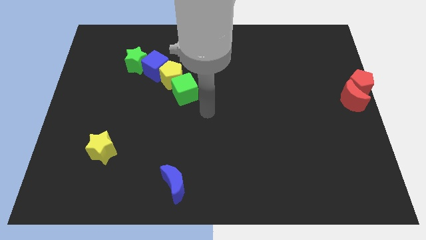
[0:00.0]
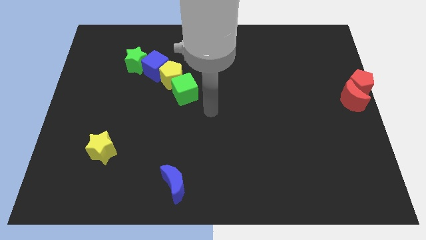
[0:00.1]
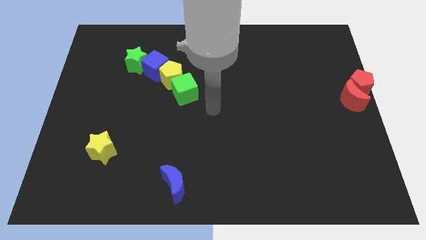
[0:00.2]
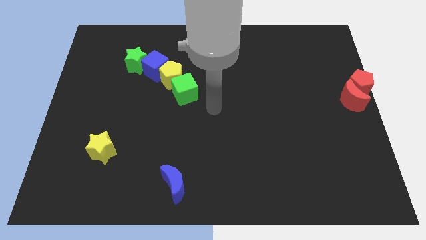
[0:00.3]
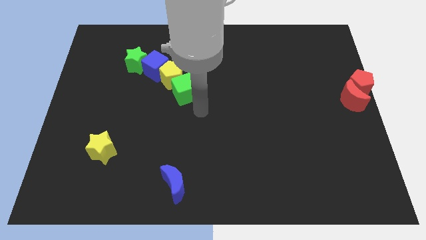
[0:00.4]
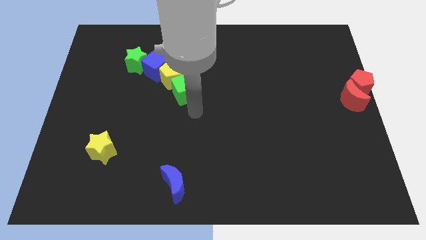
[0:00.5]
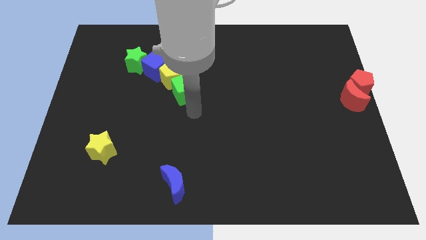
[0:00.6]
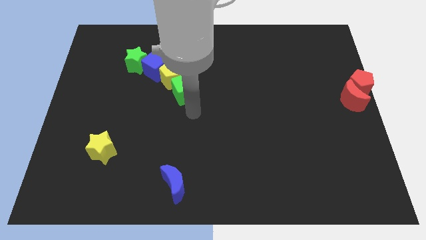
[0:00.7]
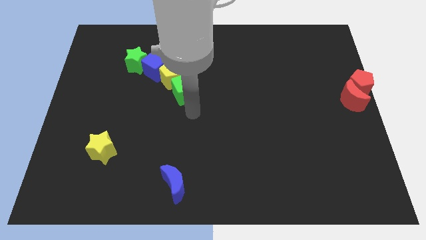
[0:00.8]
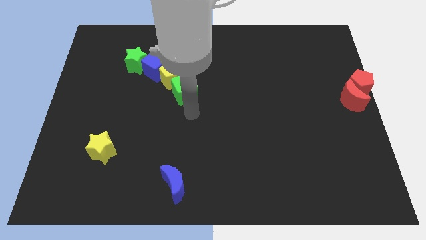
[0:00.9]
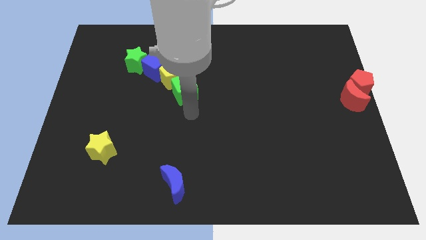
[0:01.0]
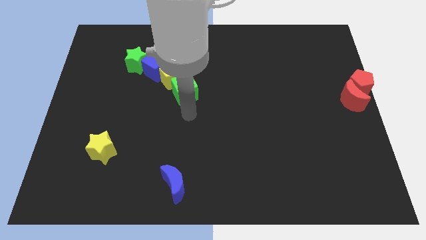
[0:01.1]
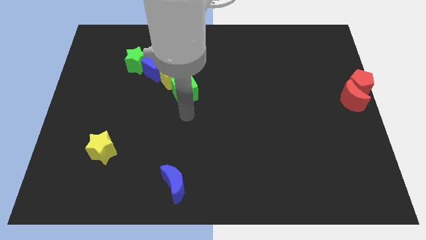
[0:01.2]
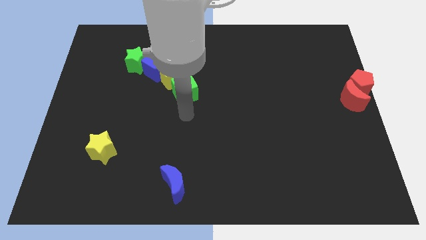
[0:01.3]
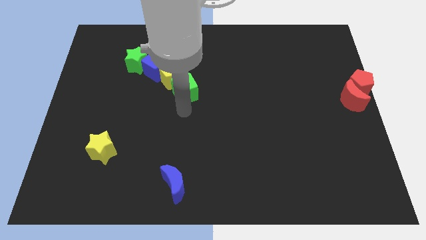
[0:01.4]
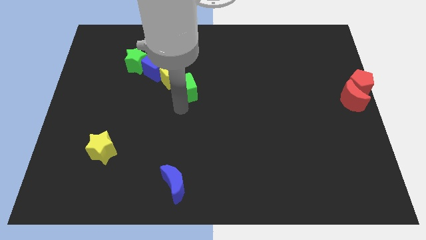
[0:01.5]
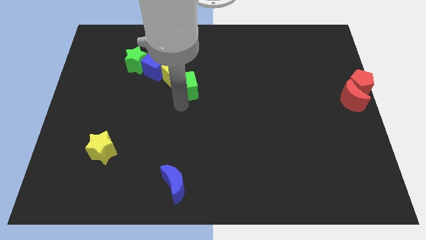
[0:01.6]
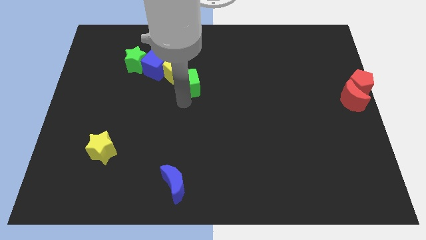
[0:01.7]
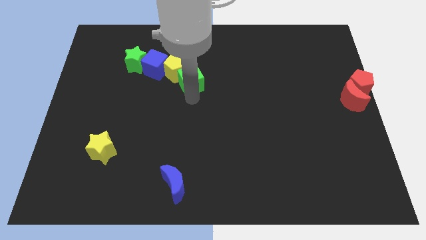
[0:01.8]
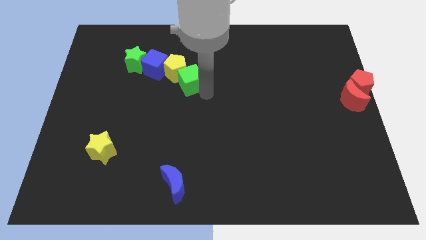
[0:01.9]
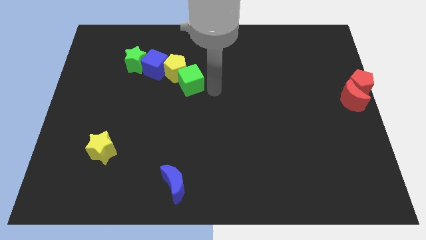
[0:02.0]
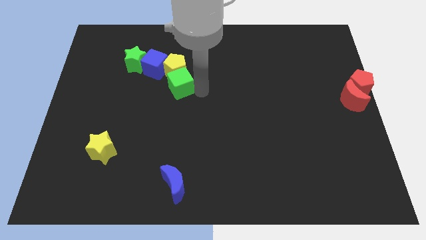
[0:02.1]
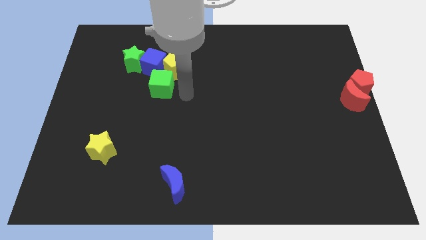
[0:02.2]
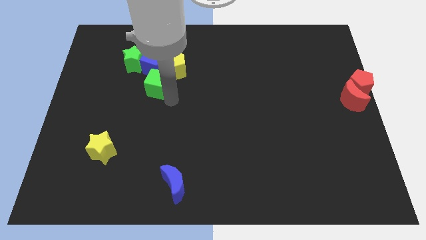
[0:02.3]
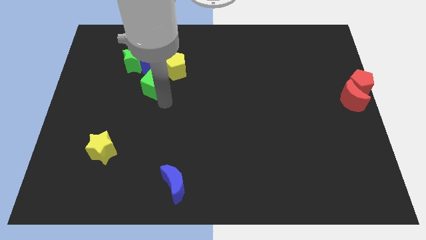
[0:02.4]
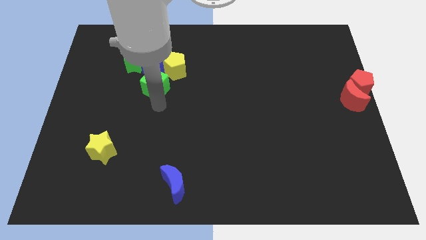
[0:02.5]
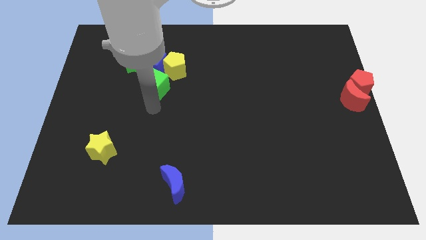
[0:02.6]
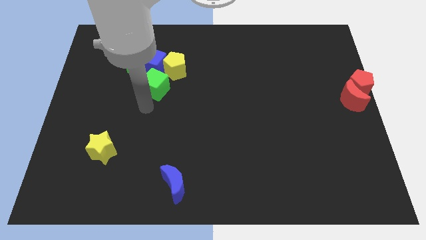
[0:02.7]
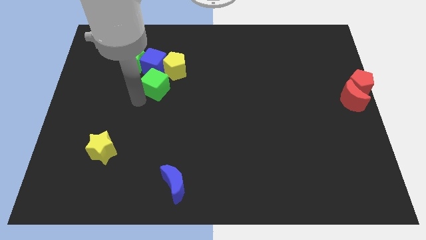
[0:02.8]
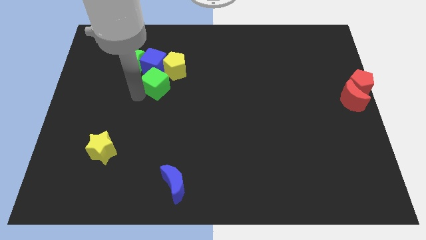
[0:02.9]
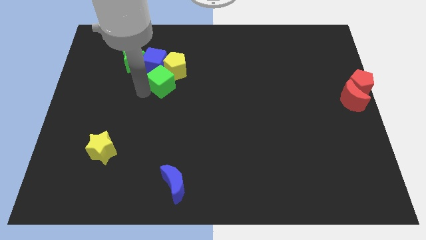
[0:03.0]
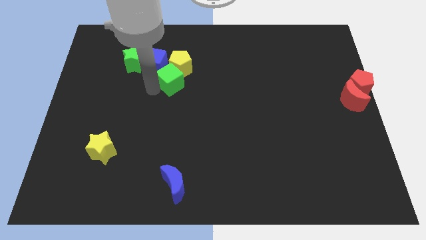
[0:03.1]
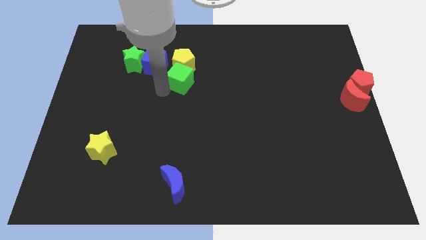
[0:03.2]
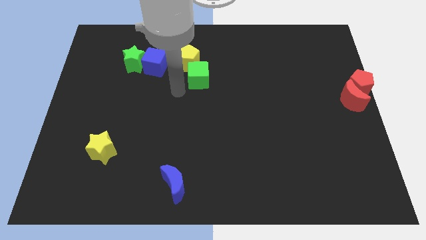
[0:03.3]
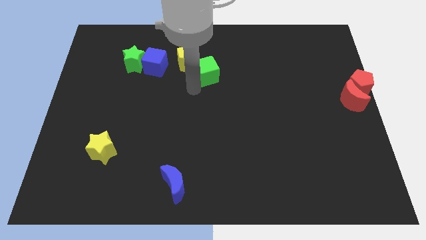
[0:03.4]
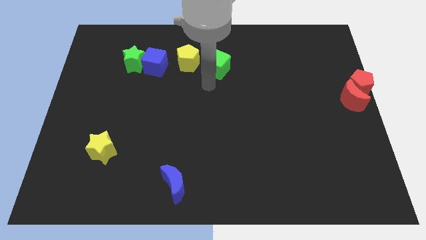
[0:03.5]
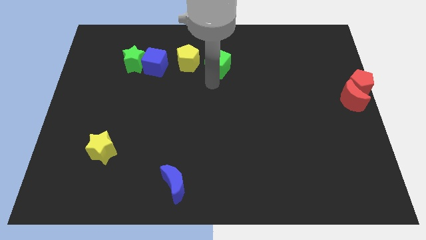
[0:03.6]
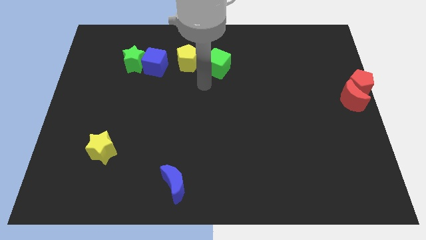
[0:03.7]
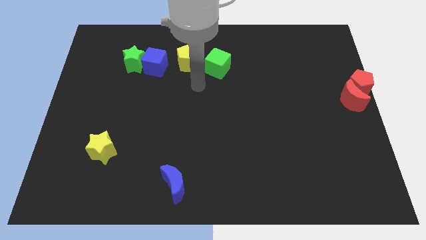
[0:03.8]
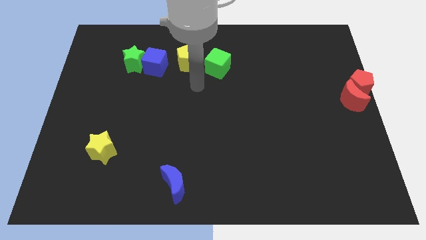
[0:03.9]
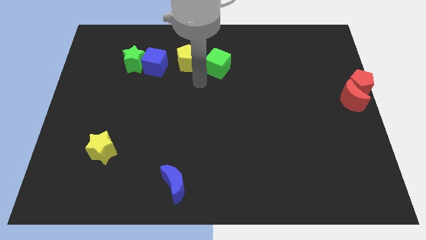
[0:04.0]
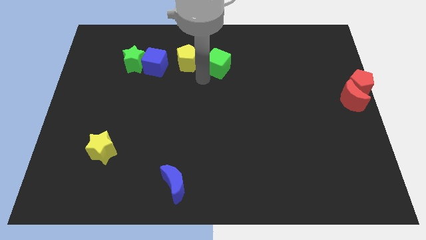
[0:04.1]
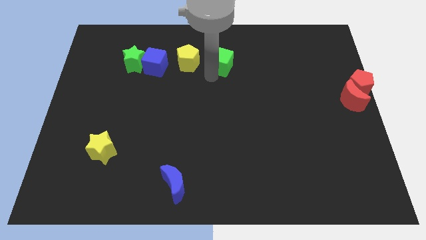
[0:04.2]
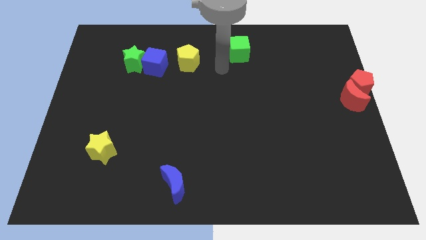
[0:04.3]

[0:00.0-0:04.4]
slide the green cube to the right side of the yellow pentagon

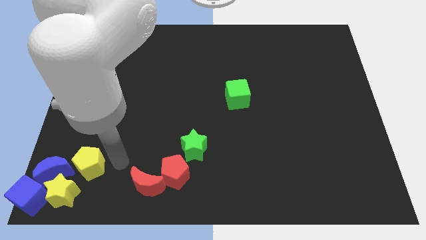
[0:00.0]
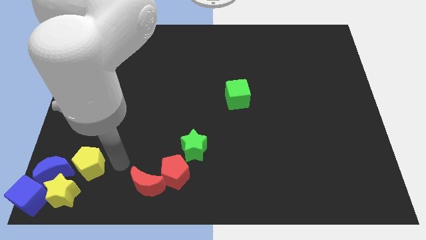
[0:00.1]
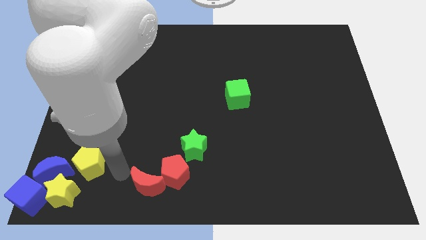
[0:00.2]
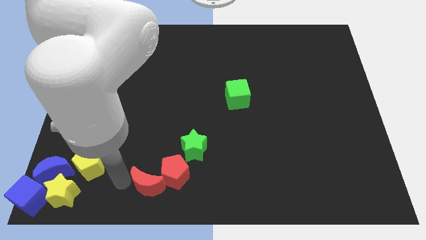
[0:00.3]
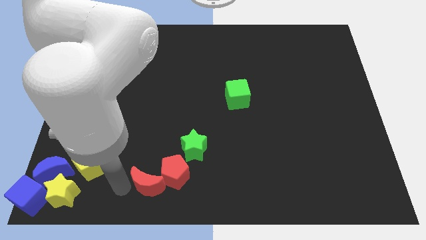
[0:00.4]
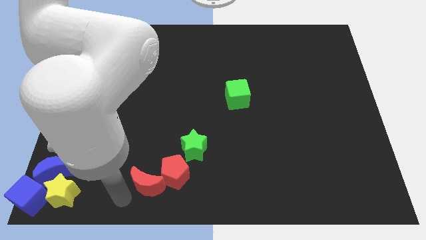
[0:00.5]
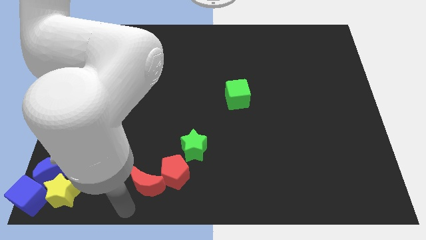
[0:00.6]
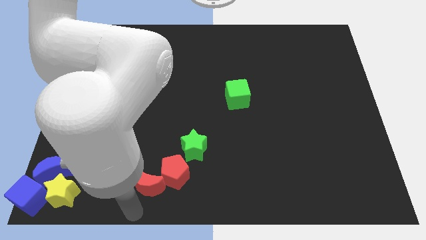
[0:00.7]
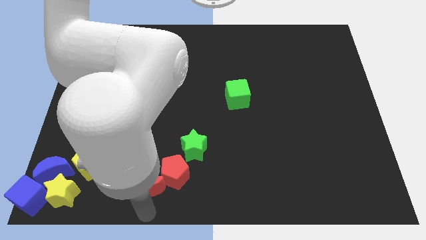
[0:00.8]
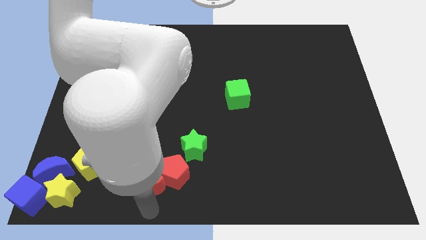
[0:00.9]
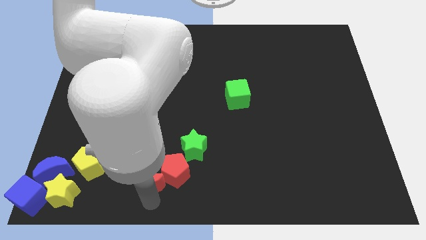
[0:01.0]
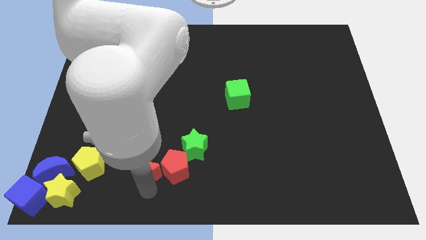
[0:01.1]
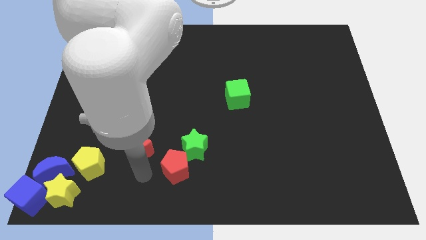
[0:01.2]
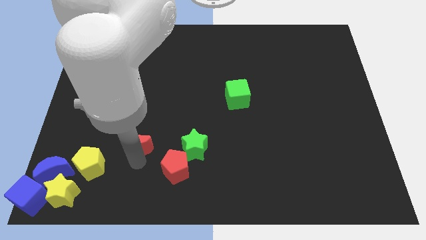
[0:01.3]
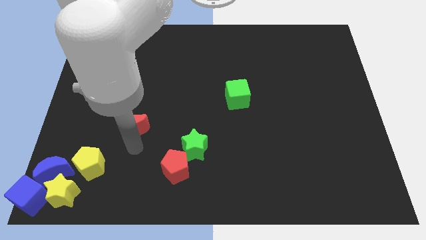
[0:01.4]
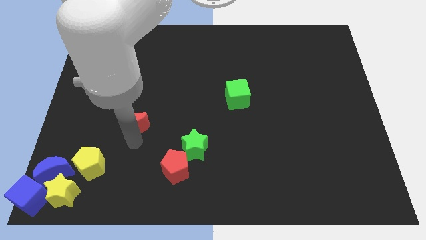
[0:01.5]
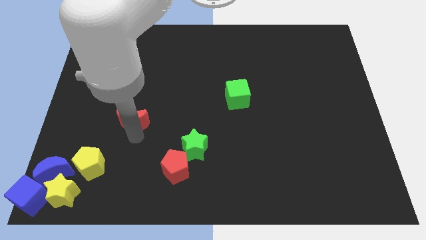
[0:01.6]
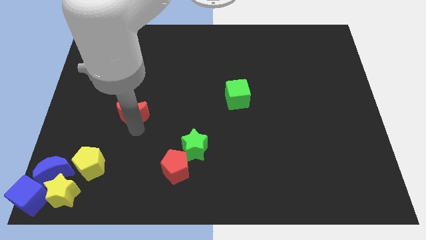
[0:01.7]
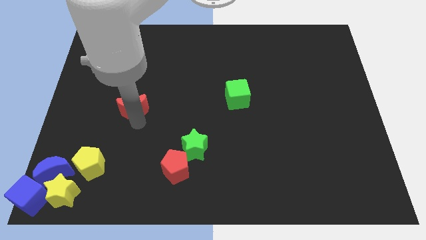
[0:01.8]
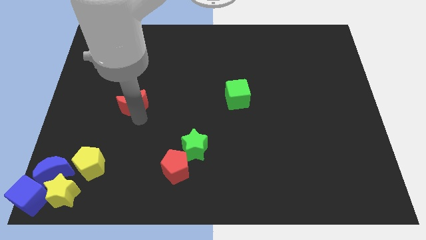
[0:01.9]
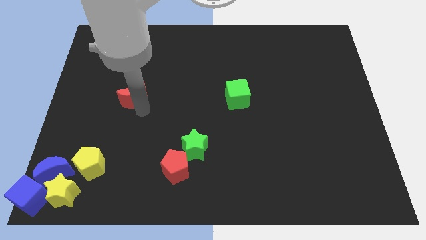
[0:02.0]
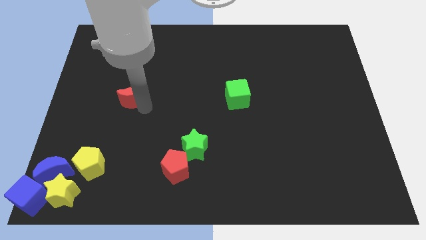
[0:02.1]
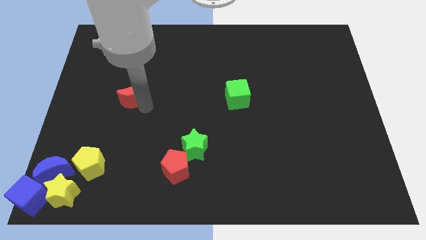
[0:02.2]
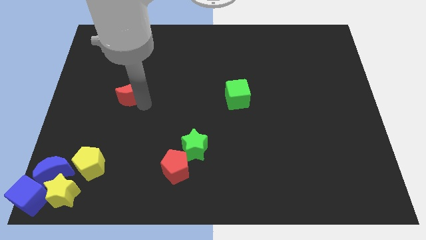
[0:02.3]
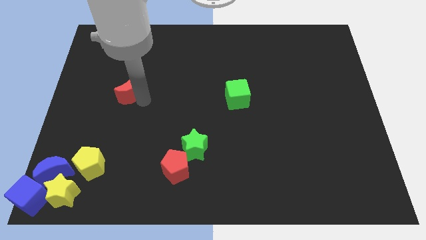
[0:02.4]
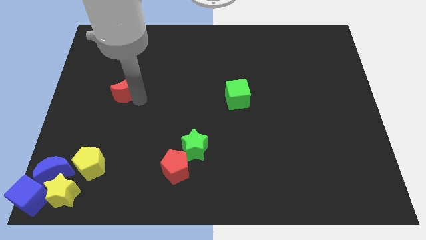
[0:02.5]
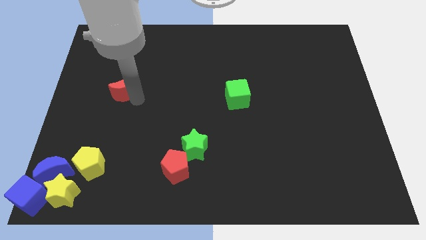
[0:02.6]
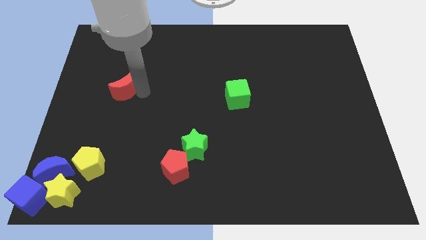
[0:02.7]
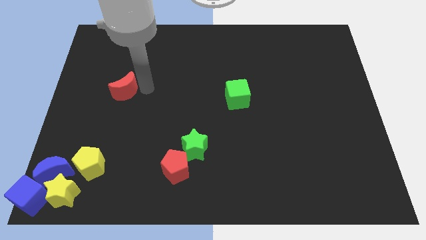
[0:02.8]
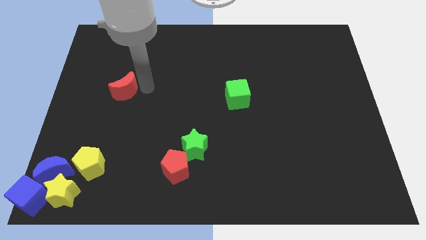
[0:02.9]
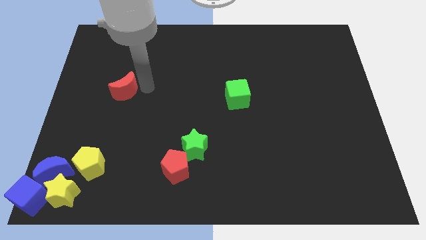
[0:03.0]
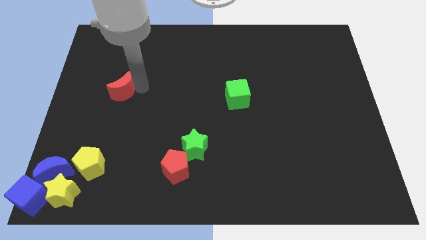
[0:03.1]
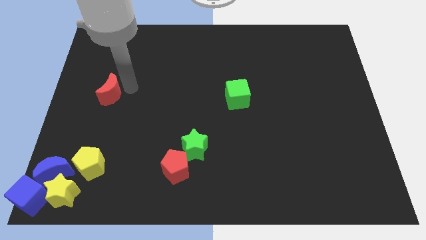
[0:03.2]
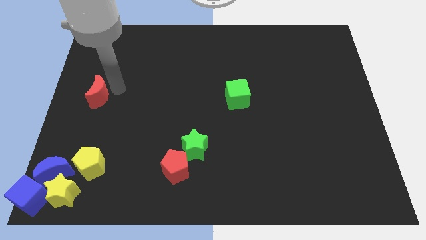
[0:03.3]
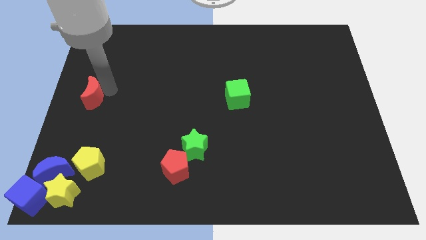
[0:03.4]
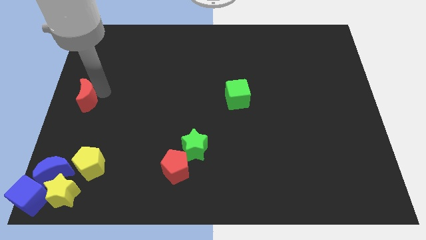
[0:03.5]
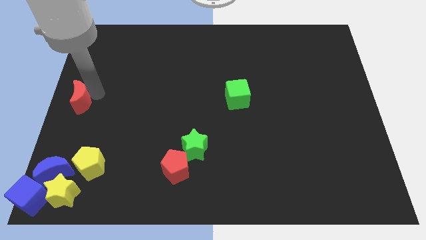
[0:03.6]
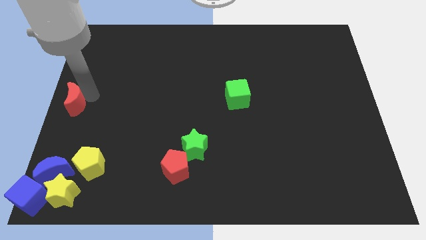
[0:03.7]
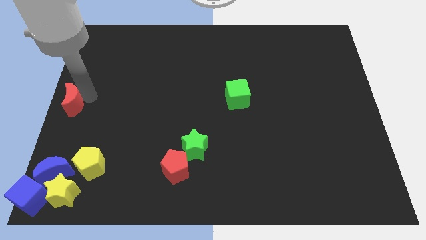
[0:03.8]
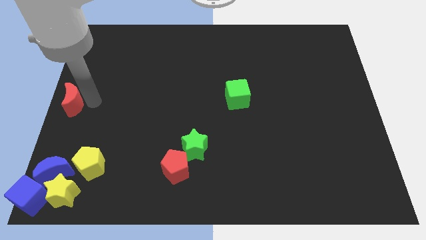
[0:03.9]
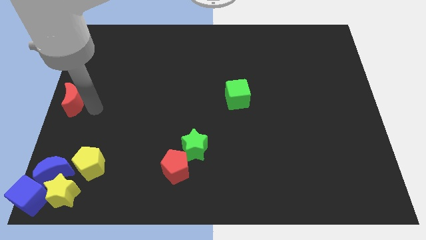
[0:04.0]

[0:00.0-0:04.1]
move the red crescent to the left center of the board

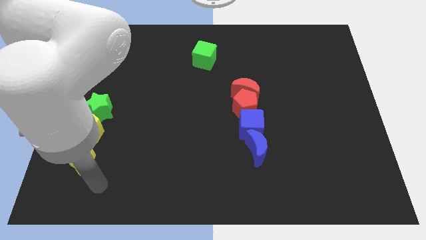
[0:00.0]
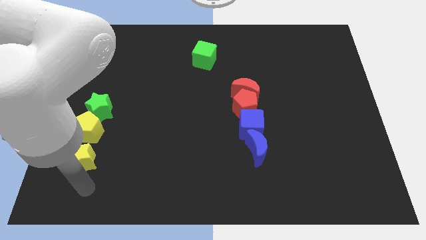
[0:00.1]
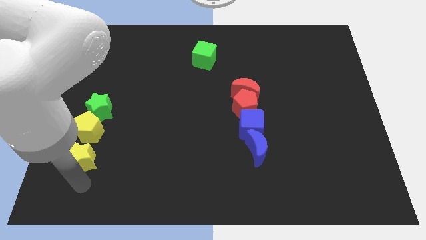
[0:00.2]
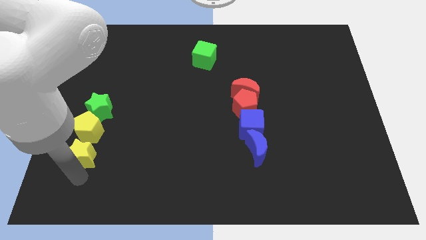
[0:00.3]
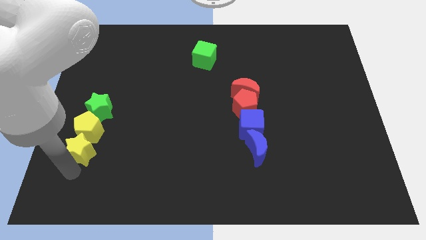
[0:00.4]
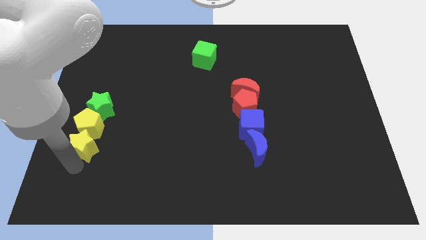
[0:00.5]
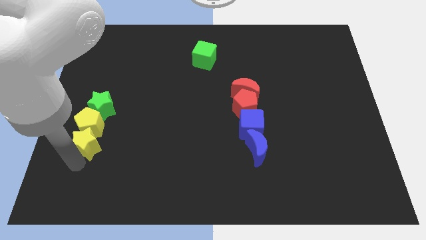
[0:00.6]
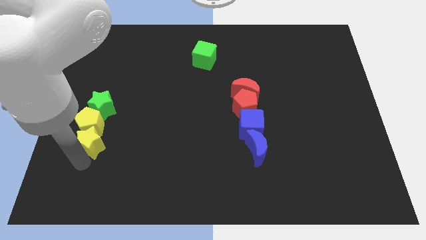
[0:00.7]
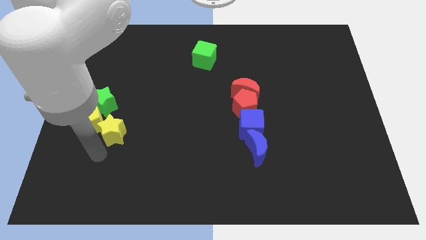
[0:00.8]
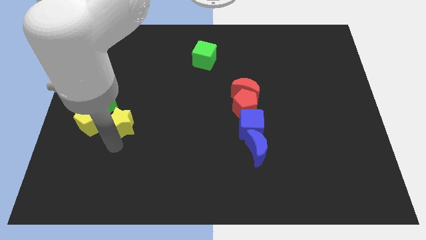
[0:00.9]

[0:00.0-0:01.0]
separate the yellow star from the yellow pentagon
